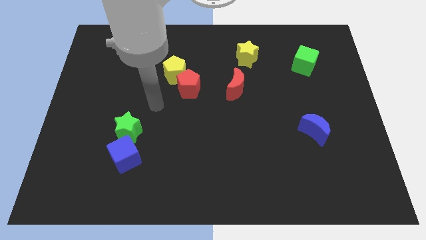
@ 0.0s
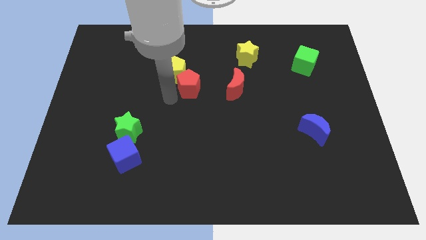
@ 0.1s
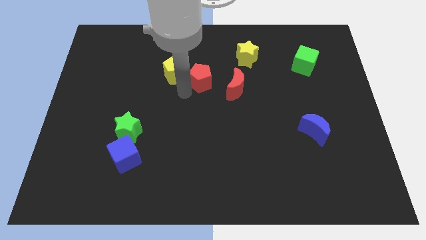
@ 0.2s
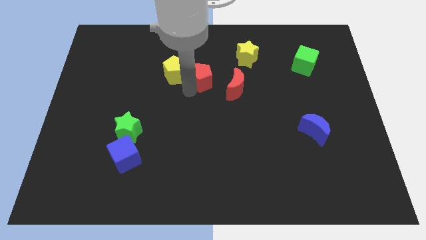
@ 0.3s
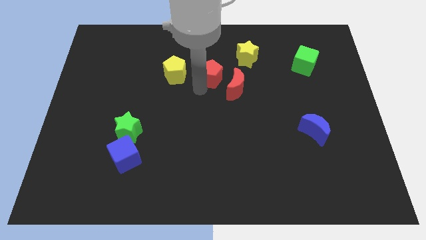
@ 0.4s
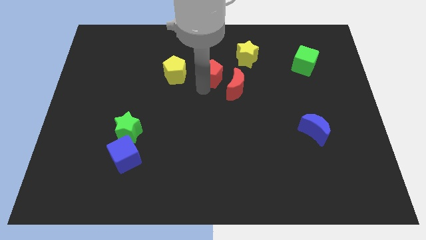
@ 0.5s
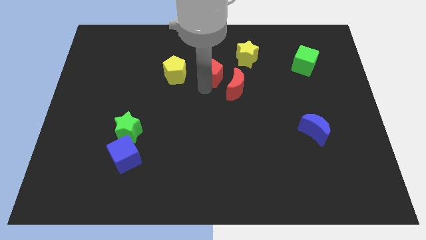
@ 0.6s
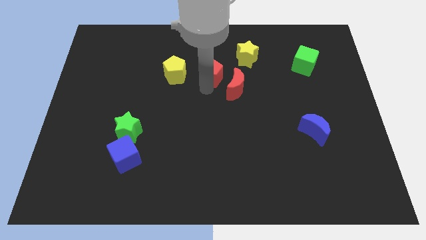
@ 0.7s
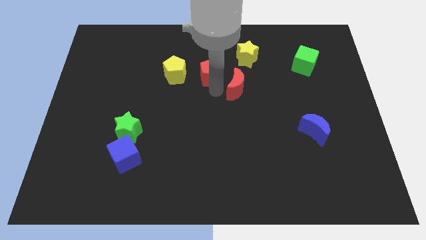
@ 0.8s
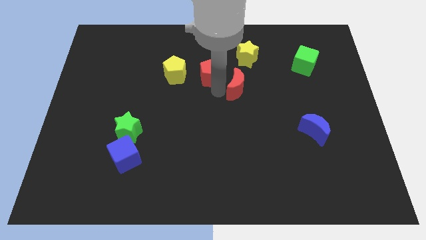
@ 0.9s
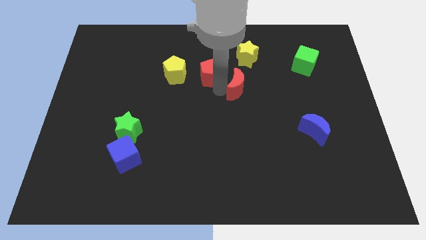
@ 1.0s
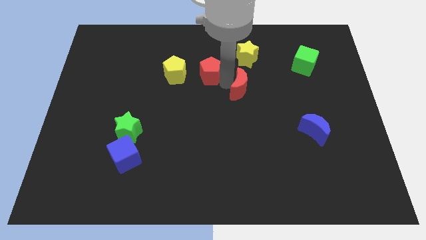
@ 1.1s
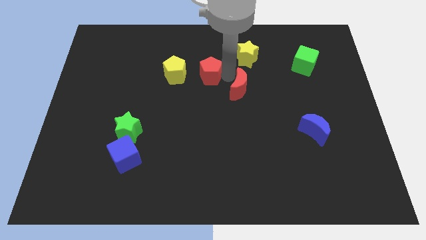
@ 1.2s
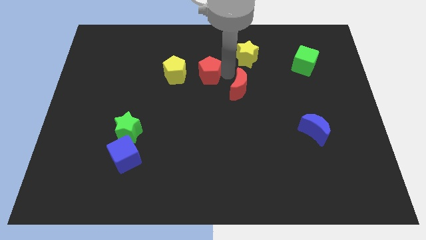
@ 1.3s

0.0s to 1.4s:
separate the red pentagon away from the yellow pentagon

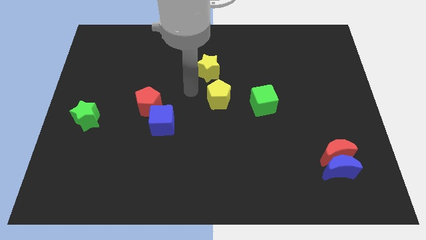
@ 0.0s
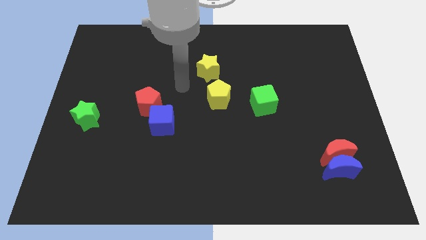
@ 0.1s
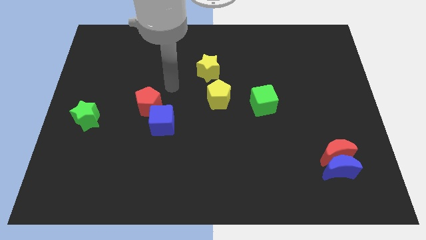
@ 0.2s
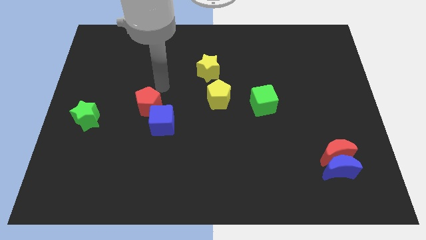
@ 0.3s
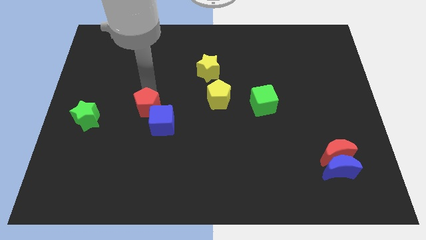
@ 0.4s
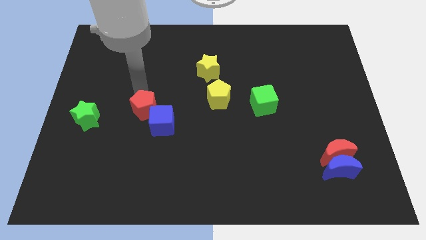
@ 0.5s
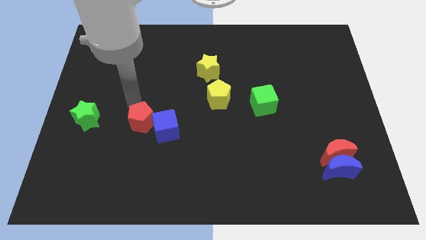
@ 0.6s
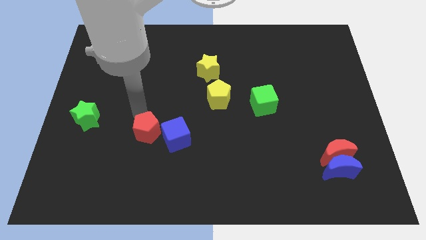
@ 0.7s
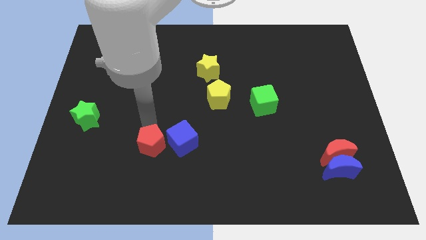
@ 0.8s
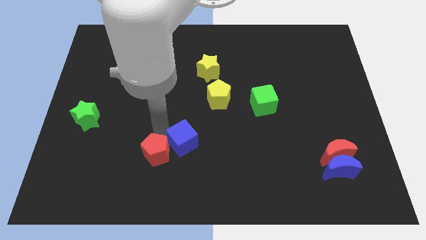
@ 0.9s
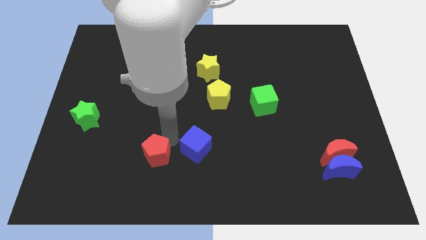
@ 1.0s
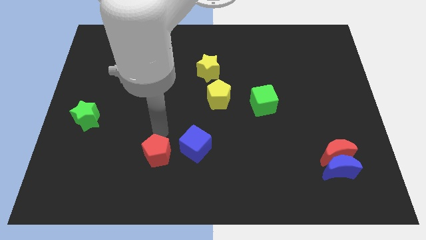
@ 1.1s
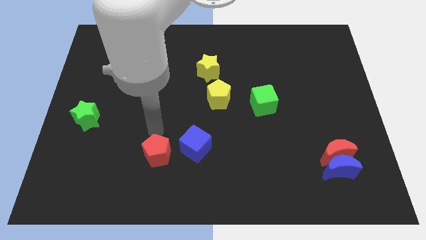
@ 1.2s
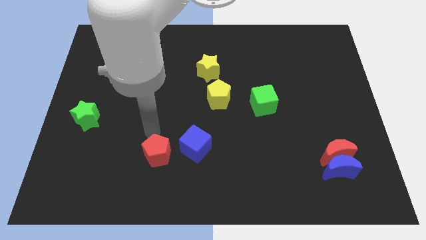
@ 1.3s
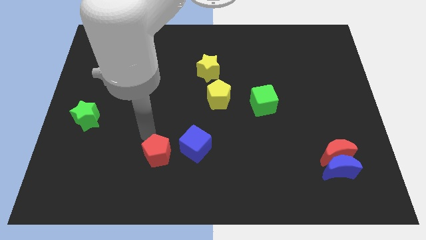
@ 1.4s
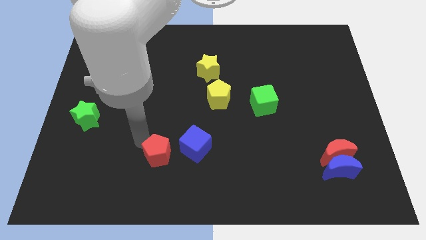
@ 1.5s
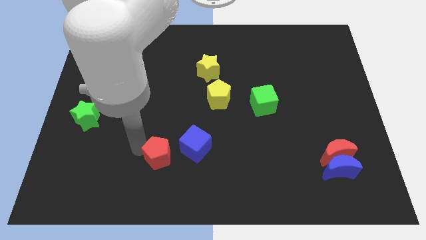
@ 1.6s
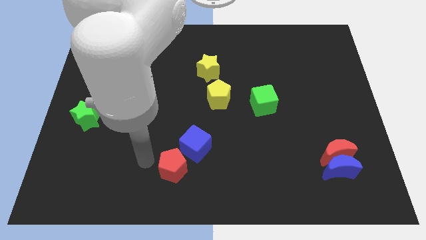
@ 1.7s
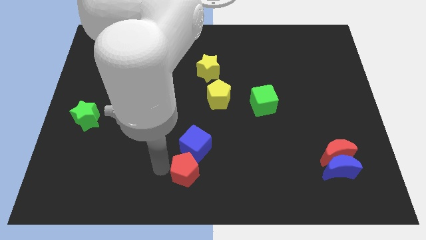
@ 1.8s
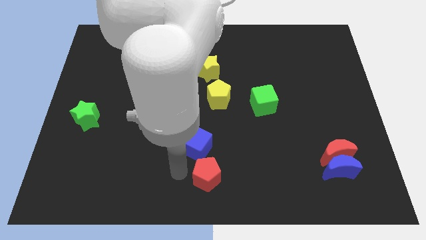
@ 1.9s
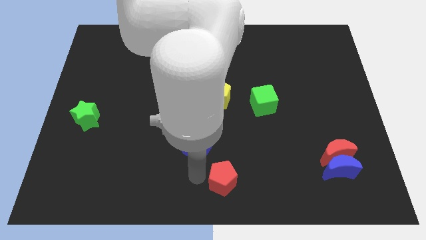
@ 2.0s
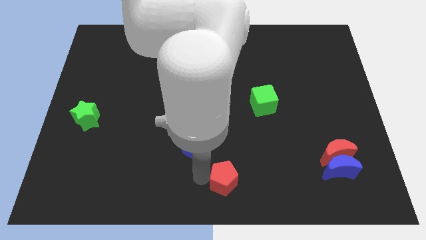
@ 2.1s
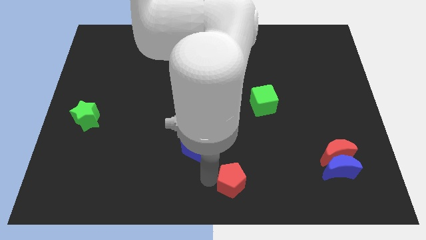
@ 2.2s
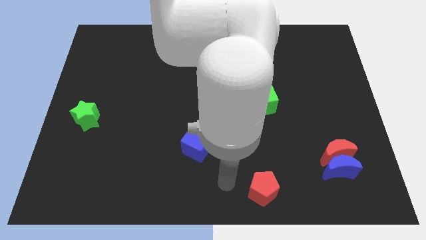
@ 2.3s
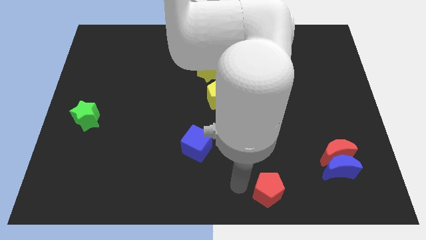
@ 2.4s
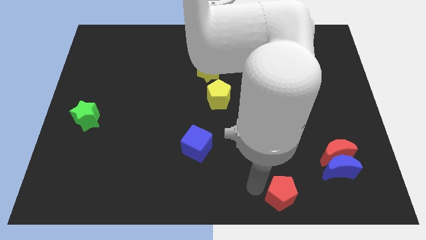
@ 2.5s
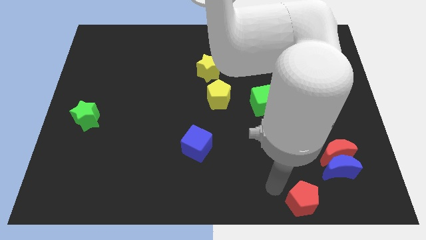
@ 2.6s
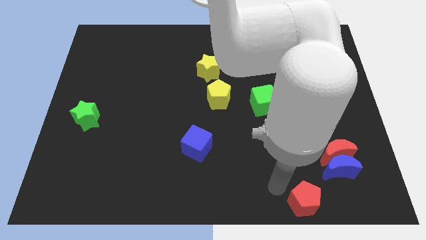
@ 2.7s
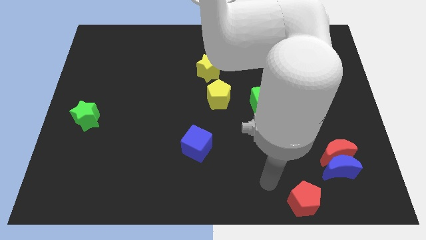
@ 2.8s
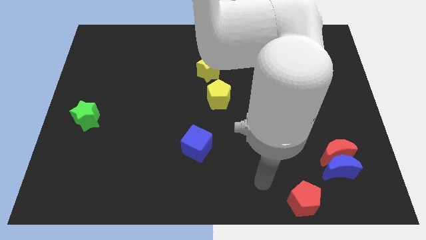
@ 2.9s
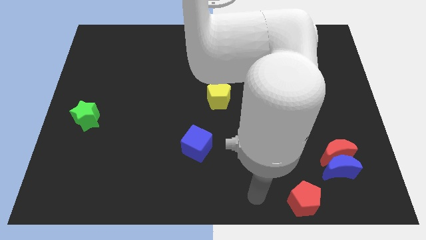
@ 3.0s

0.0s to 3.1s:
move the red pentagon to the bottom side of the board

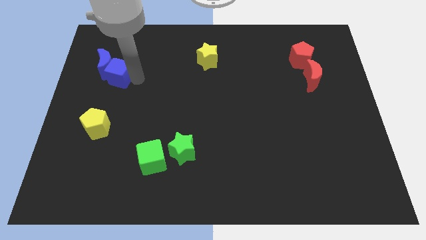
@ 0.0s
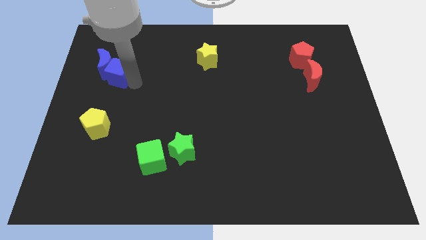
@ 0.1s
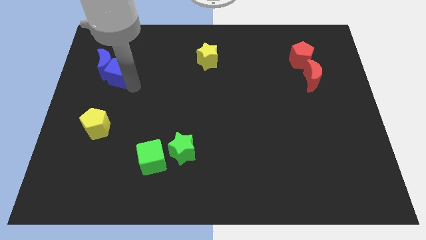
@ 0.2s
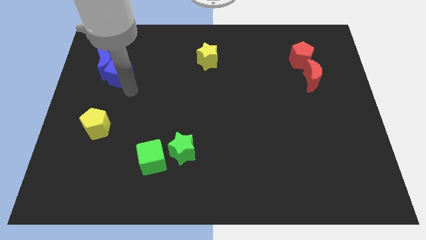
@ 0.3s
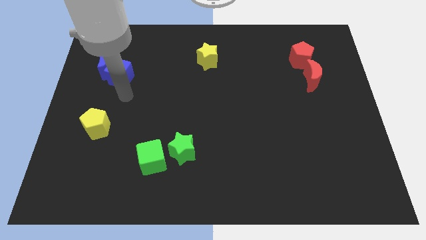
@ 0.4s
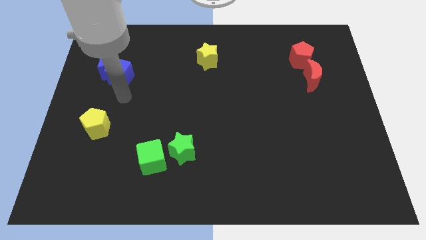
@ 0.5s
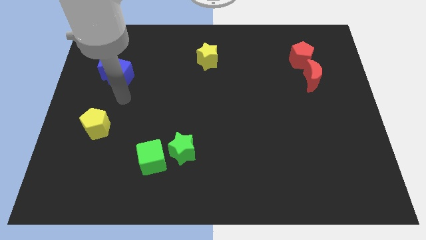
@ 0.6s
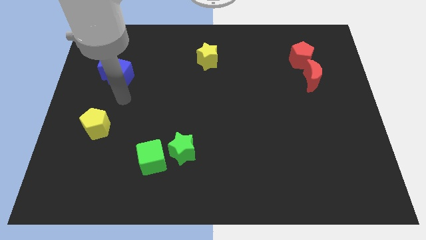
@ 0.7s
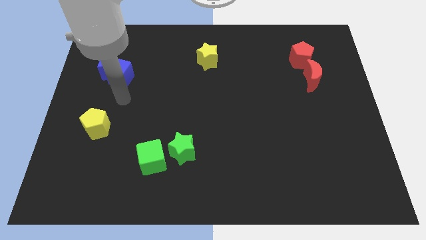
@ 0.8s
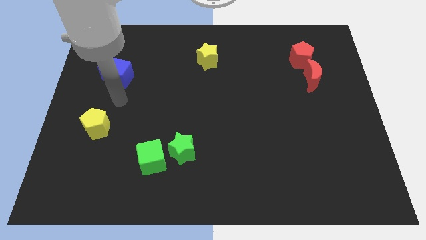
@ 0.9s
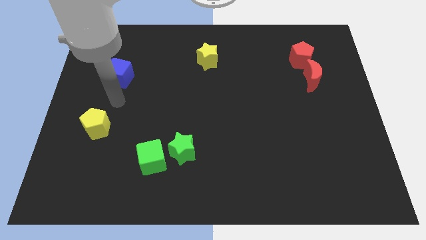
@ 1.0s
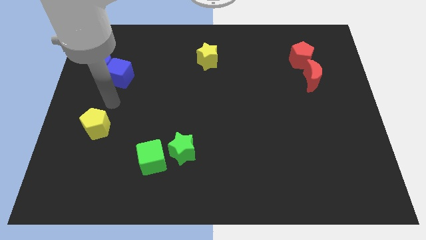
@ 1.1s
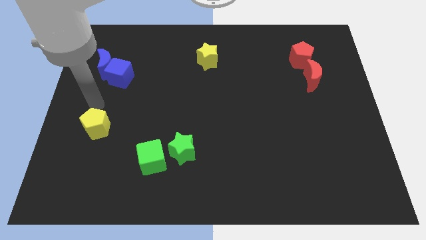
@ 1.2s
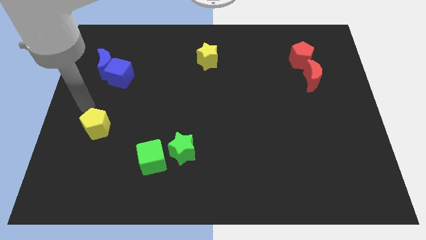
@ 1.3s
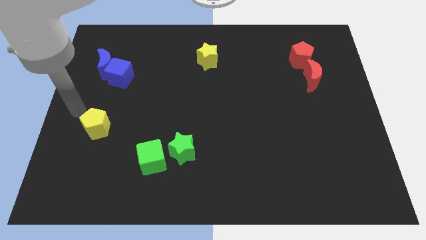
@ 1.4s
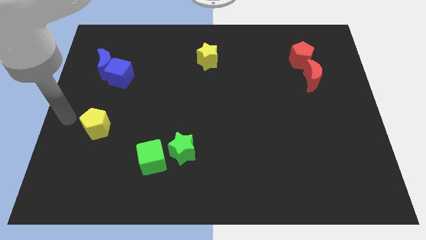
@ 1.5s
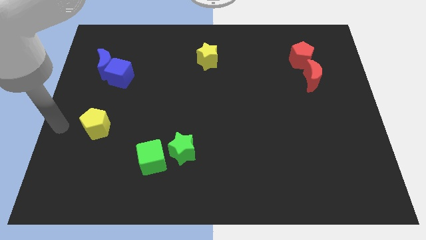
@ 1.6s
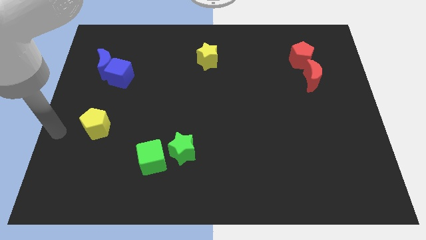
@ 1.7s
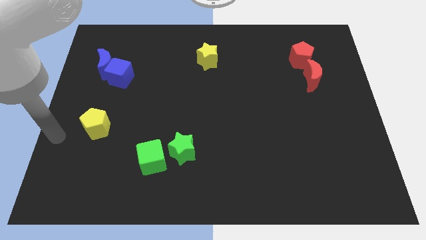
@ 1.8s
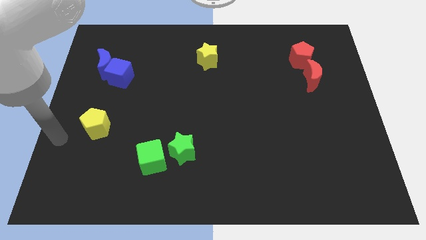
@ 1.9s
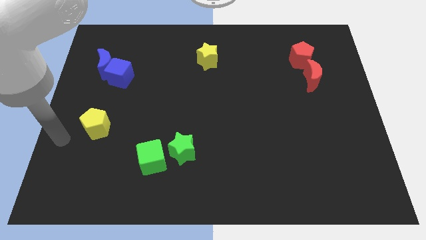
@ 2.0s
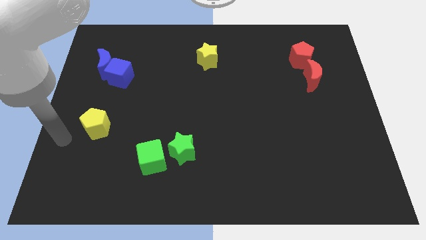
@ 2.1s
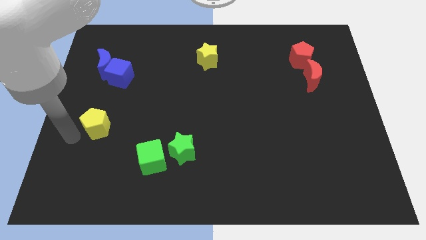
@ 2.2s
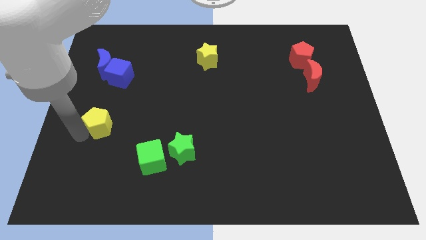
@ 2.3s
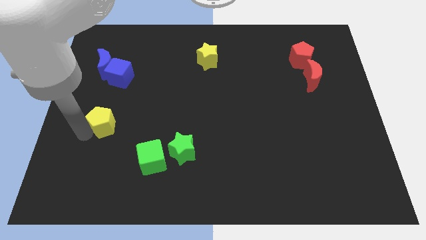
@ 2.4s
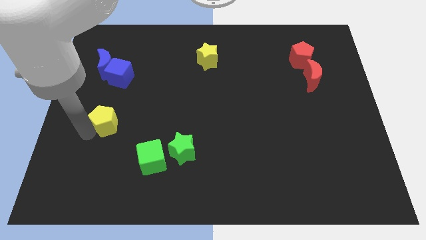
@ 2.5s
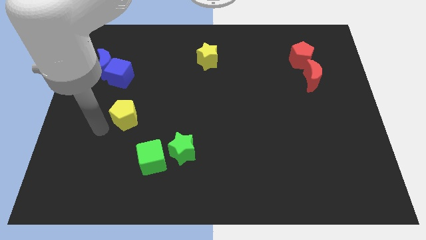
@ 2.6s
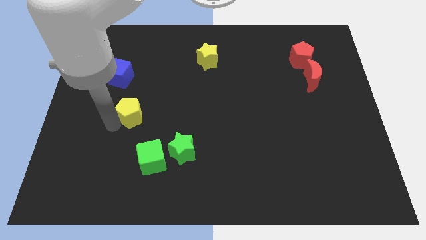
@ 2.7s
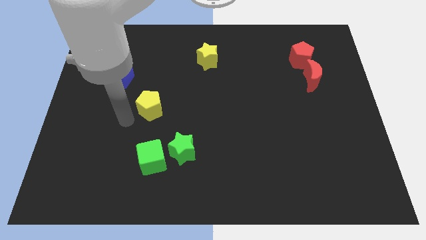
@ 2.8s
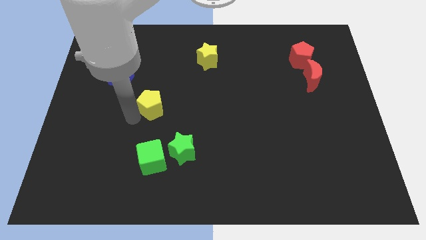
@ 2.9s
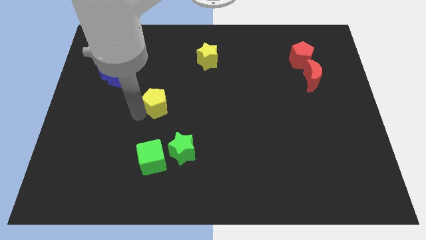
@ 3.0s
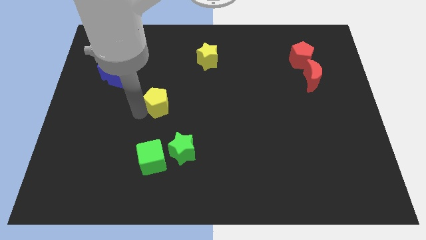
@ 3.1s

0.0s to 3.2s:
move the yellow pentagon diagonally bottom right to the blue blocks

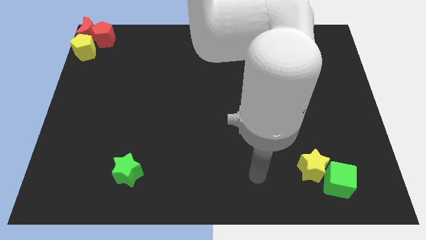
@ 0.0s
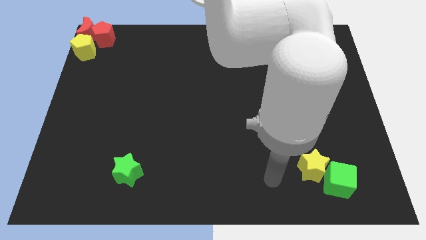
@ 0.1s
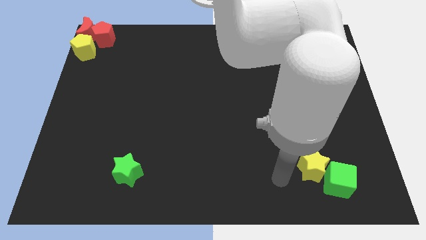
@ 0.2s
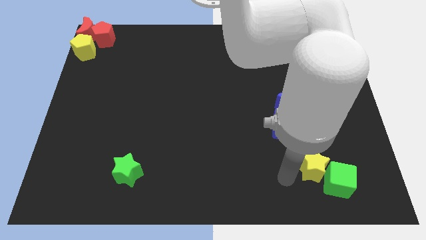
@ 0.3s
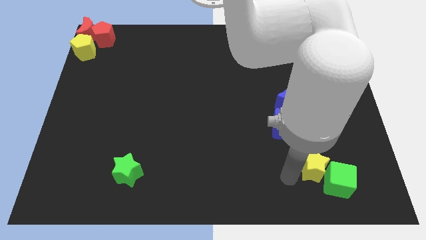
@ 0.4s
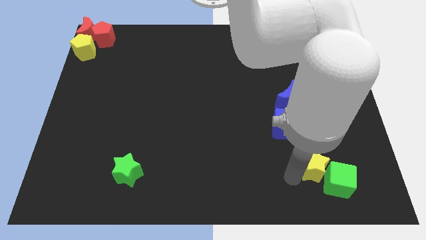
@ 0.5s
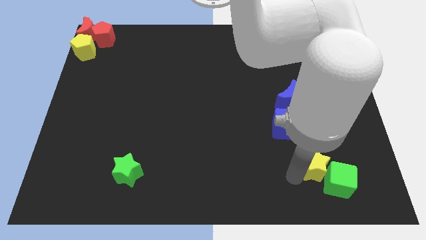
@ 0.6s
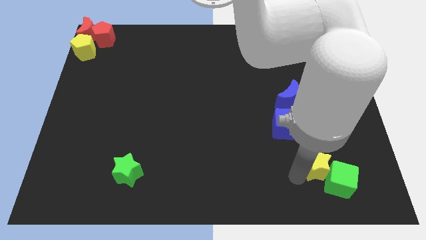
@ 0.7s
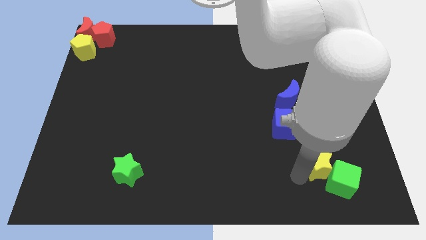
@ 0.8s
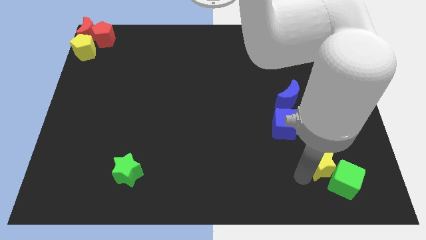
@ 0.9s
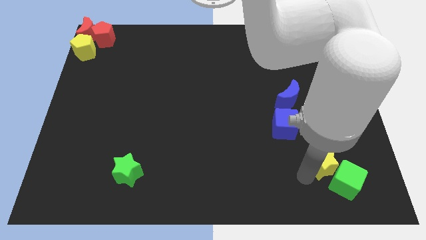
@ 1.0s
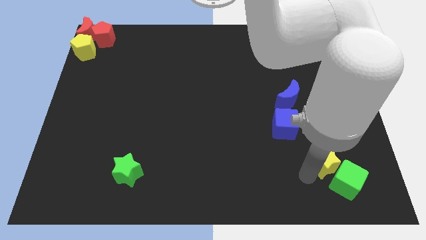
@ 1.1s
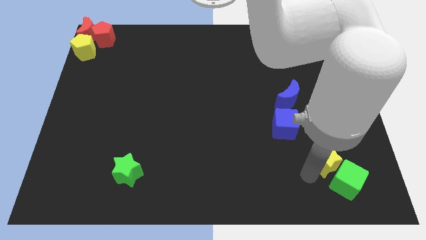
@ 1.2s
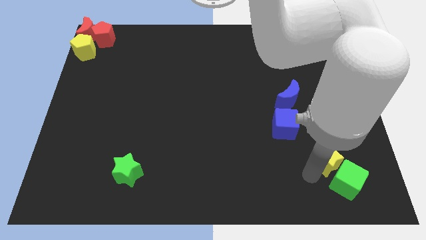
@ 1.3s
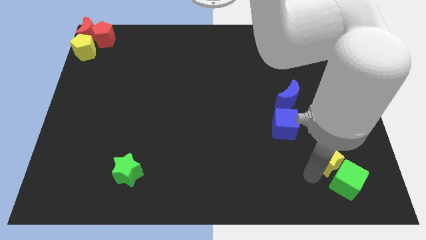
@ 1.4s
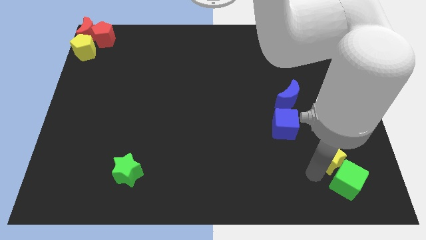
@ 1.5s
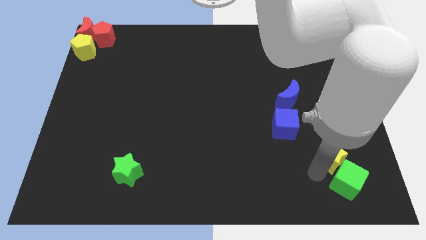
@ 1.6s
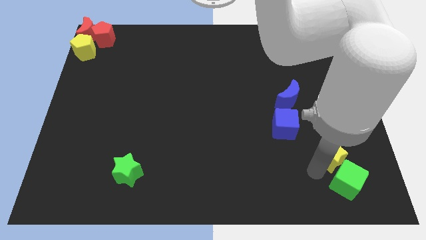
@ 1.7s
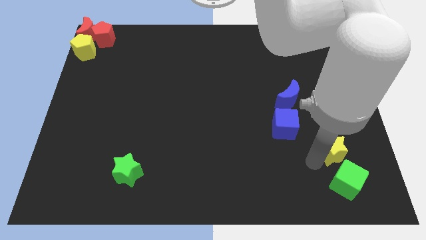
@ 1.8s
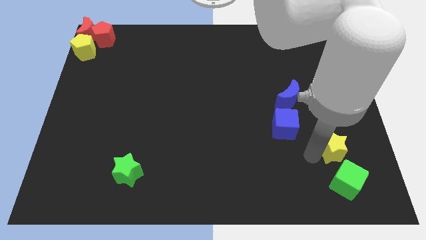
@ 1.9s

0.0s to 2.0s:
push the yellow star slightly to the top
